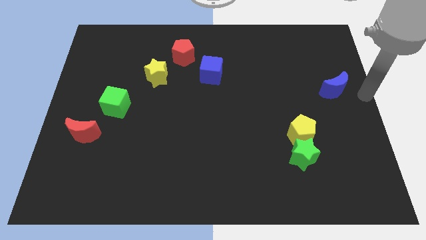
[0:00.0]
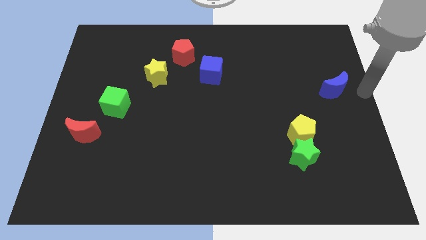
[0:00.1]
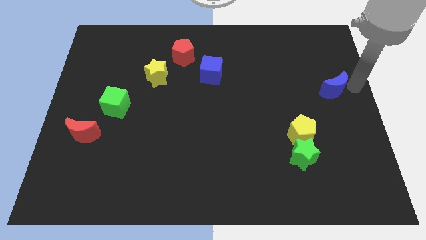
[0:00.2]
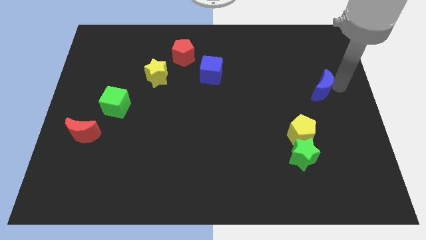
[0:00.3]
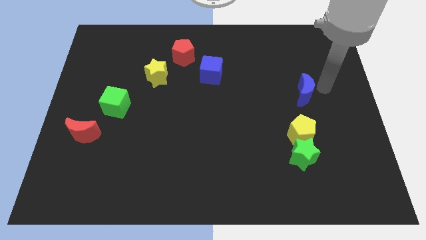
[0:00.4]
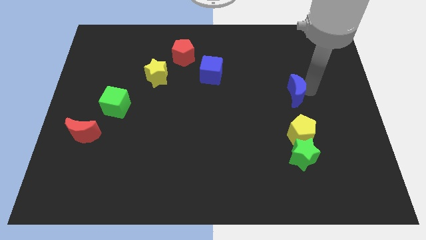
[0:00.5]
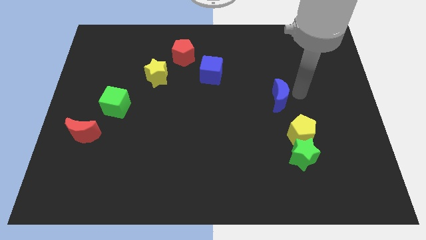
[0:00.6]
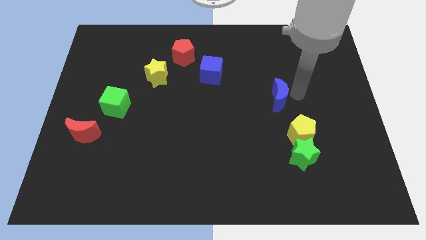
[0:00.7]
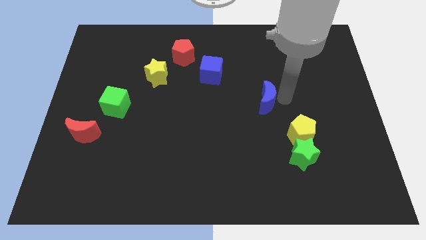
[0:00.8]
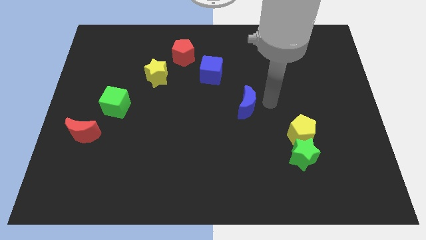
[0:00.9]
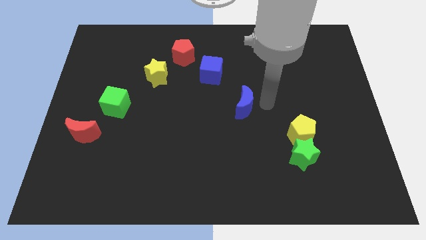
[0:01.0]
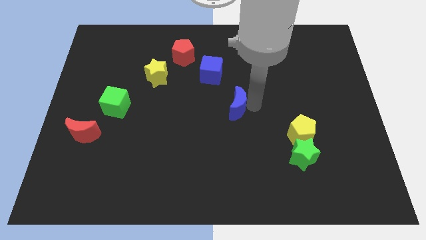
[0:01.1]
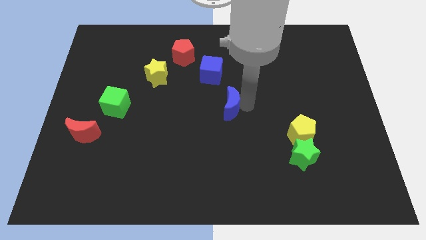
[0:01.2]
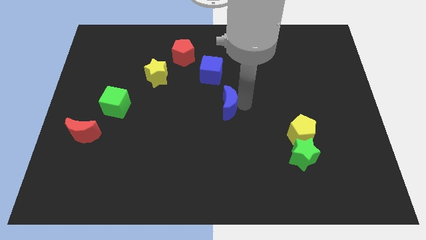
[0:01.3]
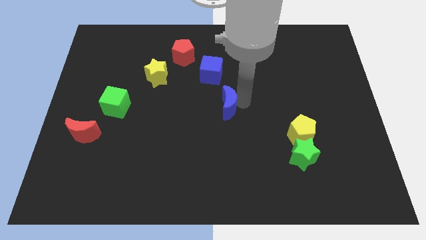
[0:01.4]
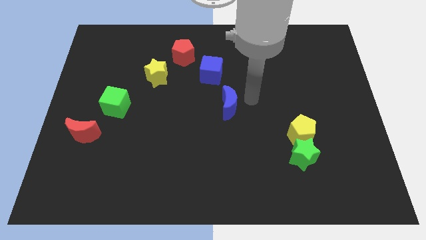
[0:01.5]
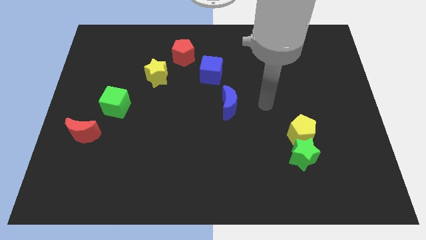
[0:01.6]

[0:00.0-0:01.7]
place the blue moon at the center of the board

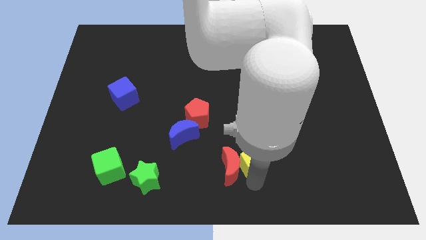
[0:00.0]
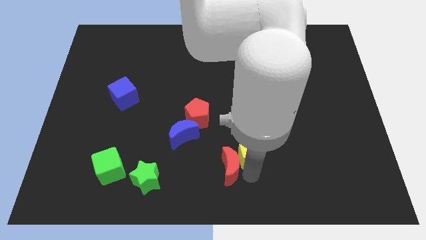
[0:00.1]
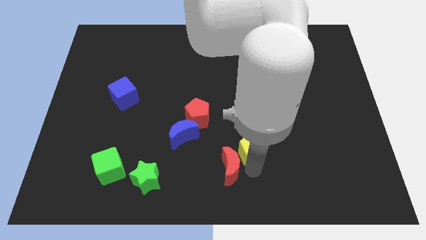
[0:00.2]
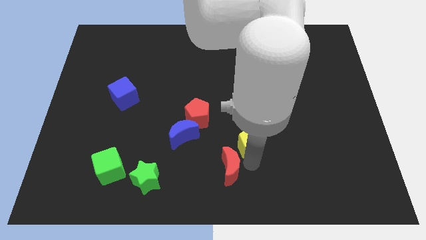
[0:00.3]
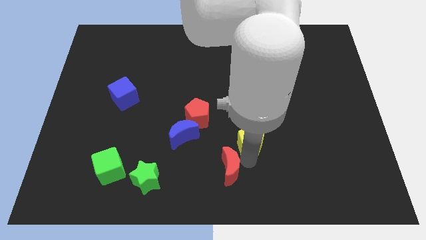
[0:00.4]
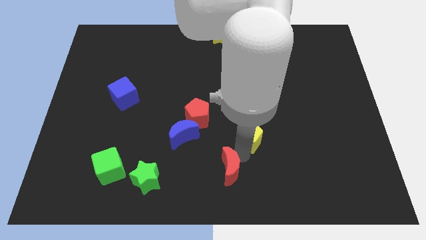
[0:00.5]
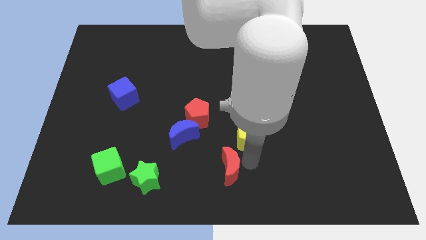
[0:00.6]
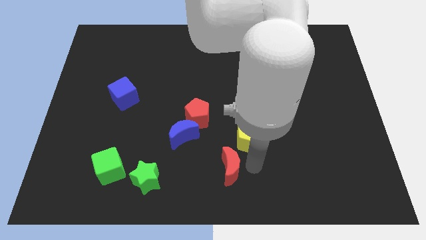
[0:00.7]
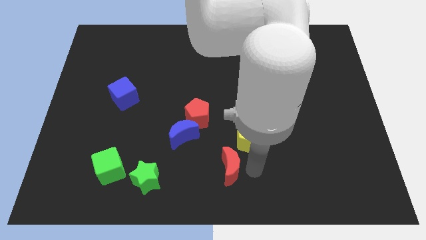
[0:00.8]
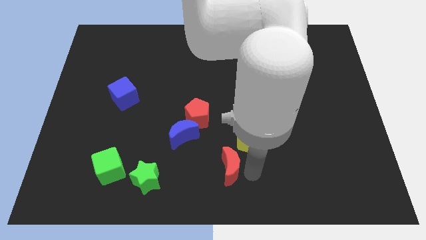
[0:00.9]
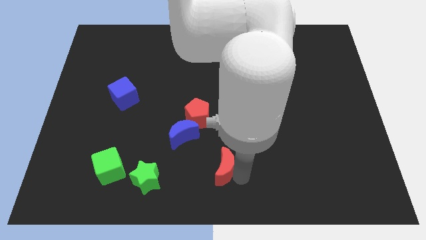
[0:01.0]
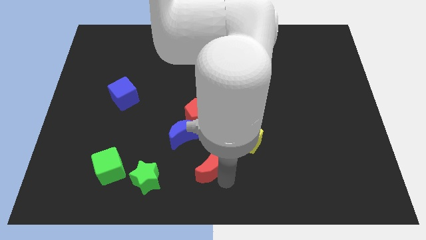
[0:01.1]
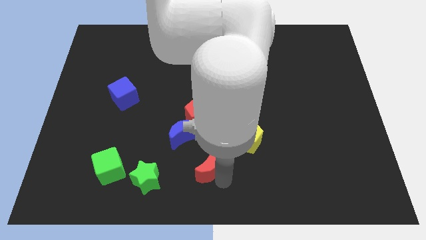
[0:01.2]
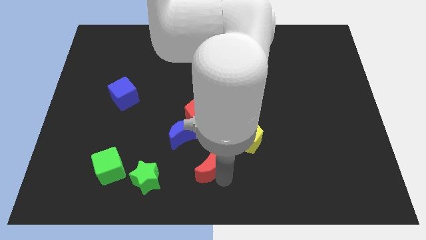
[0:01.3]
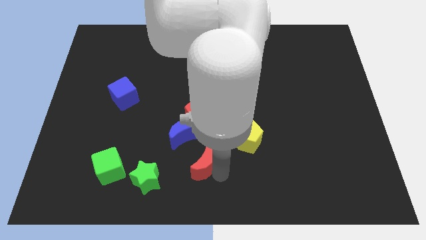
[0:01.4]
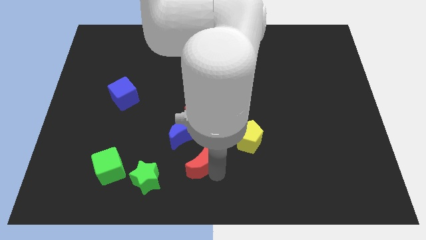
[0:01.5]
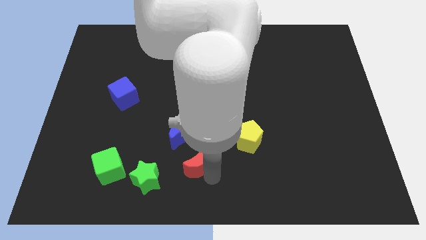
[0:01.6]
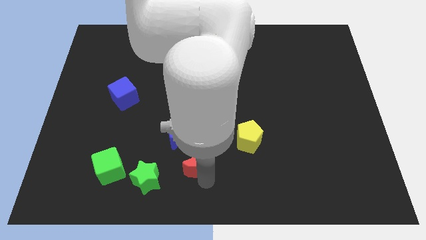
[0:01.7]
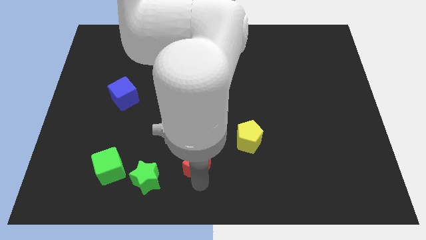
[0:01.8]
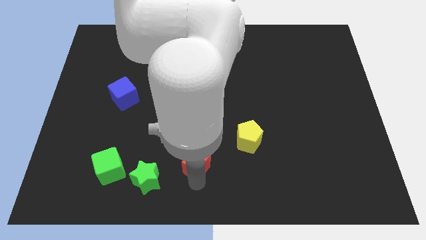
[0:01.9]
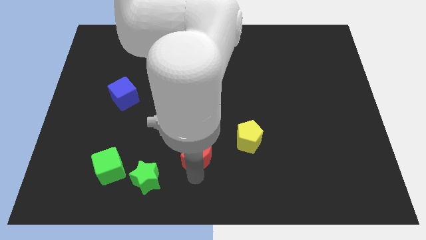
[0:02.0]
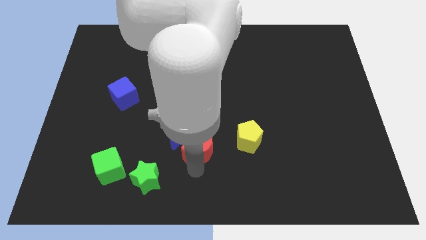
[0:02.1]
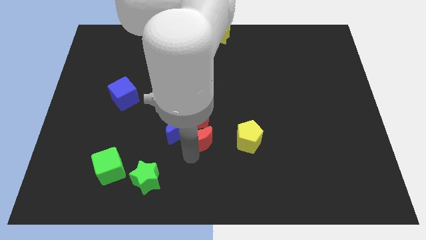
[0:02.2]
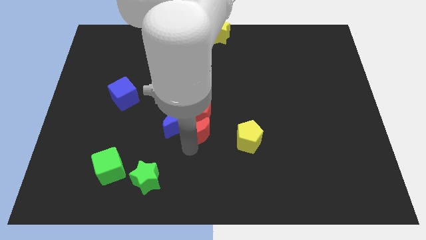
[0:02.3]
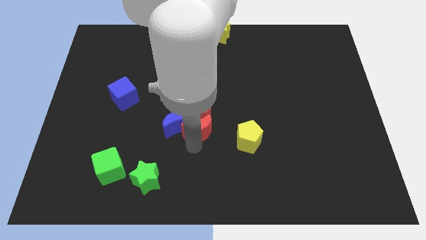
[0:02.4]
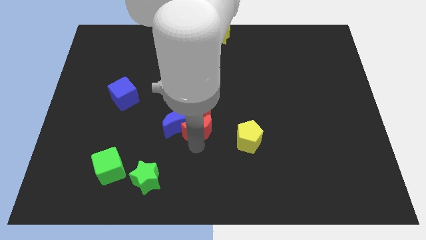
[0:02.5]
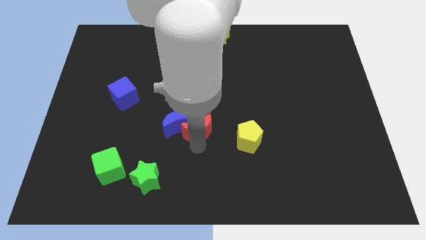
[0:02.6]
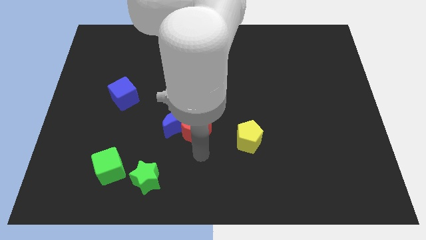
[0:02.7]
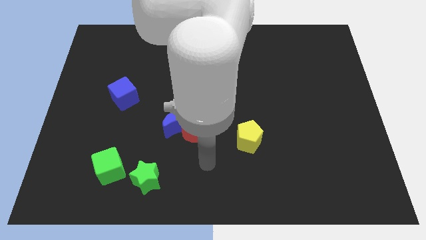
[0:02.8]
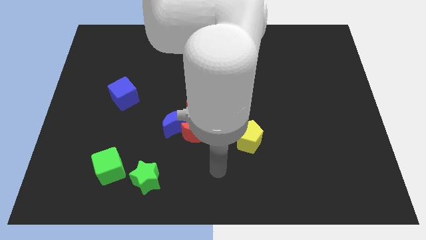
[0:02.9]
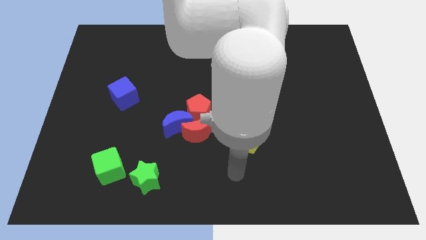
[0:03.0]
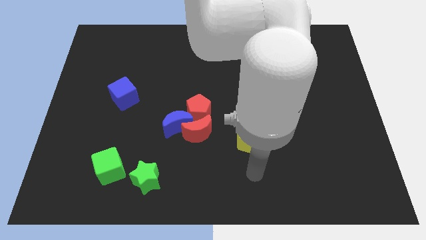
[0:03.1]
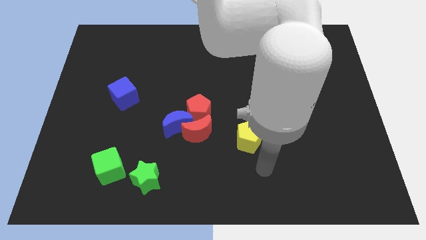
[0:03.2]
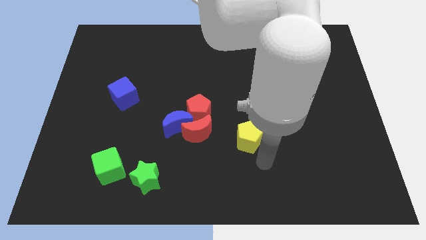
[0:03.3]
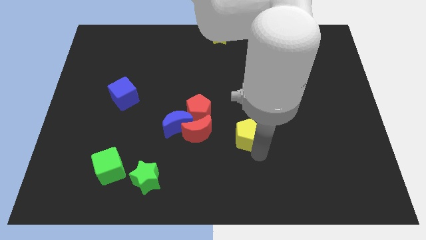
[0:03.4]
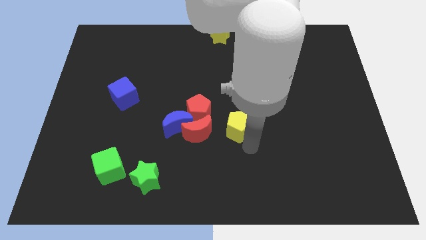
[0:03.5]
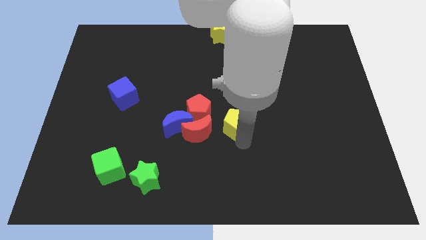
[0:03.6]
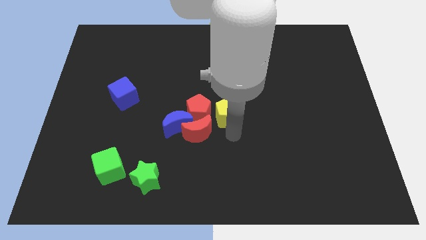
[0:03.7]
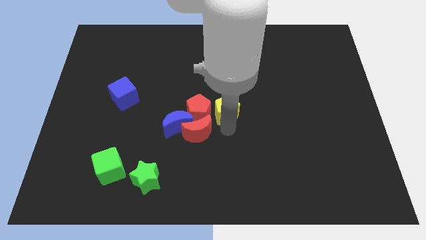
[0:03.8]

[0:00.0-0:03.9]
move red crescent into the blue crescent and red pentagon

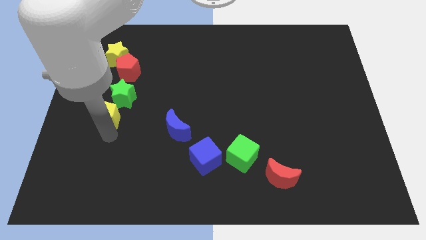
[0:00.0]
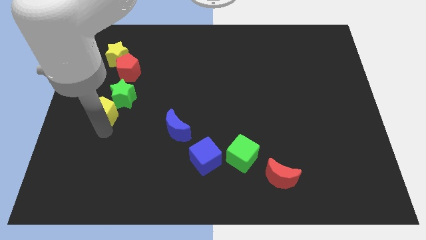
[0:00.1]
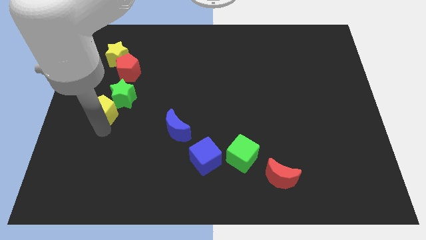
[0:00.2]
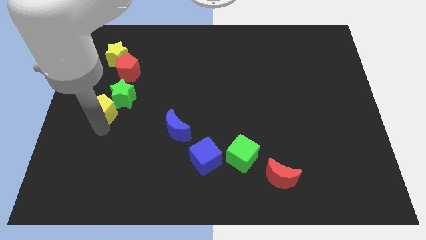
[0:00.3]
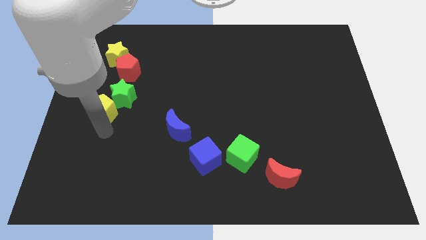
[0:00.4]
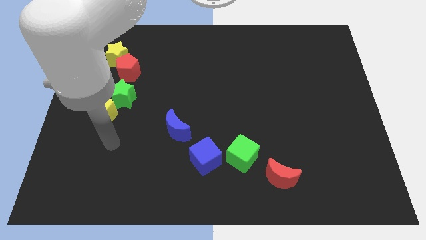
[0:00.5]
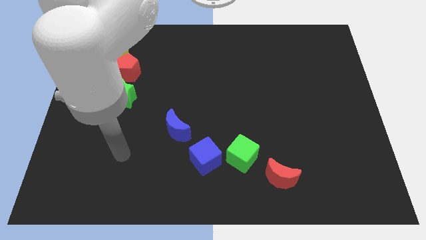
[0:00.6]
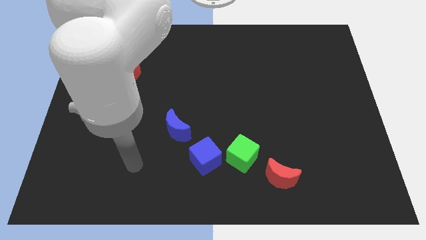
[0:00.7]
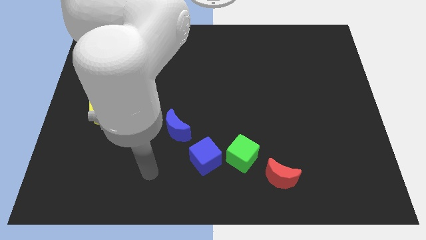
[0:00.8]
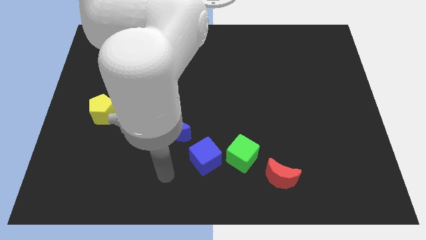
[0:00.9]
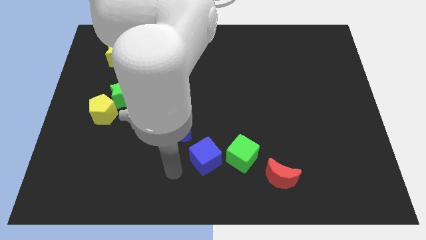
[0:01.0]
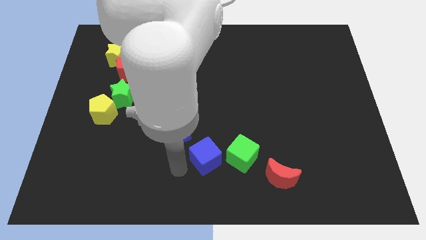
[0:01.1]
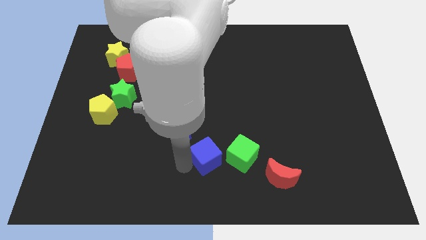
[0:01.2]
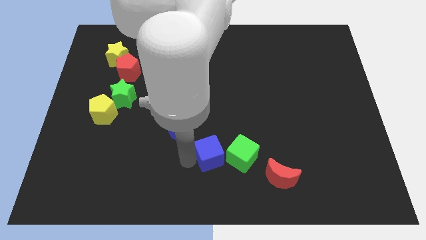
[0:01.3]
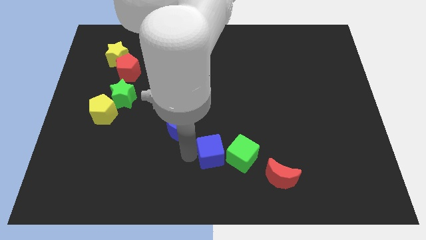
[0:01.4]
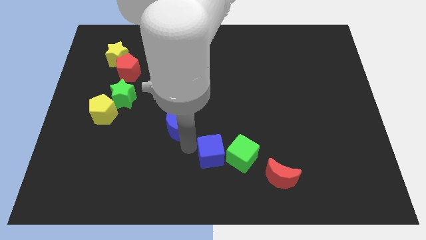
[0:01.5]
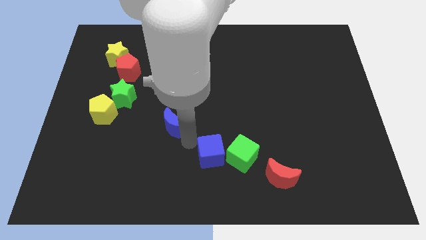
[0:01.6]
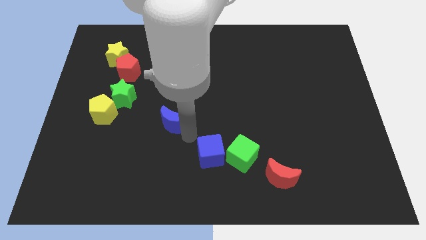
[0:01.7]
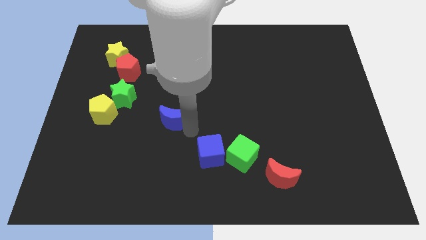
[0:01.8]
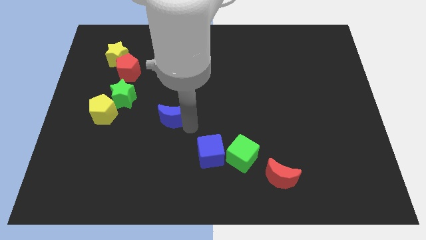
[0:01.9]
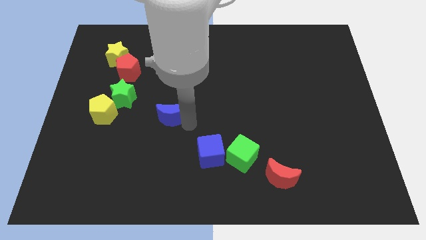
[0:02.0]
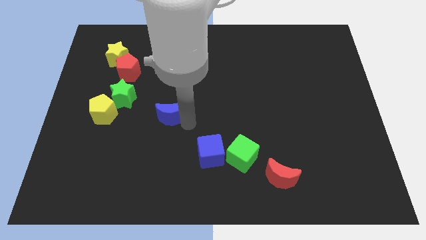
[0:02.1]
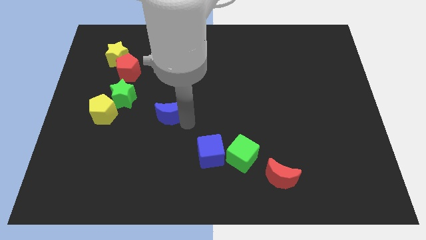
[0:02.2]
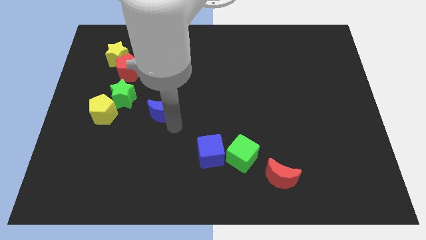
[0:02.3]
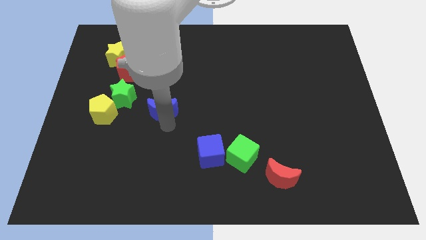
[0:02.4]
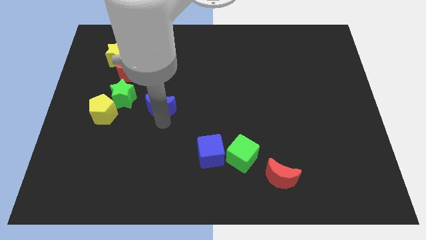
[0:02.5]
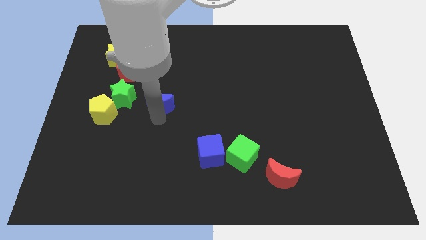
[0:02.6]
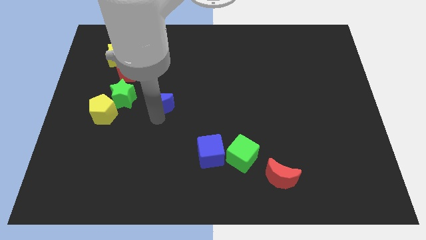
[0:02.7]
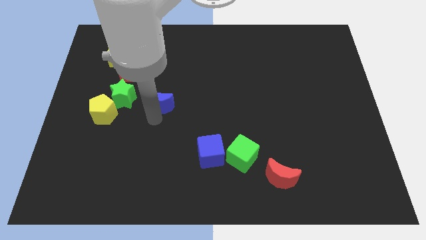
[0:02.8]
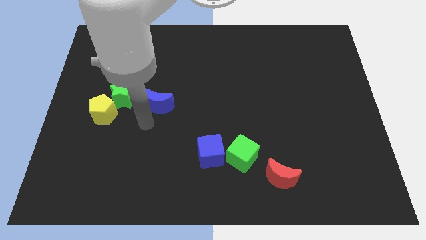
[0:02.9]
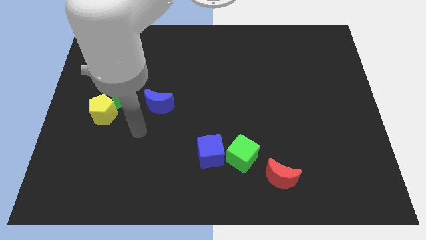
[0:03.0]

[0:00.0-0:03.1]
move the blue moon to the right of the green star

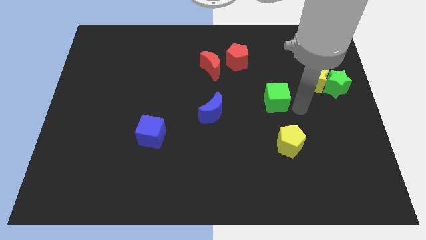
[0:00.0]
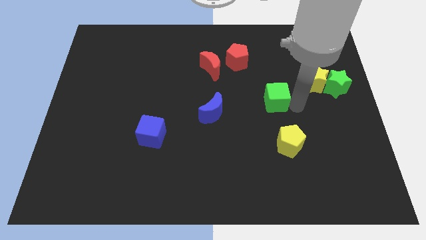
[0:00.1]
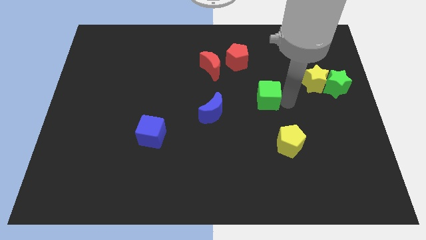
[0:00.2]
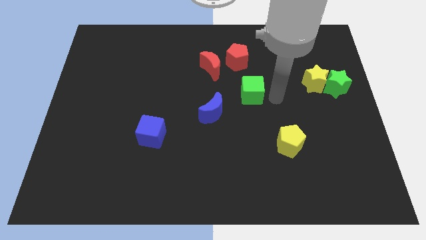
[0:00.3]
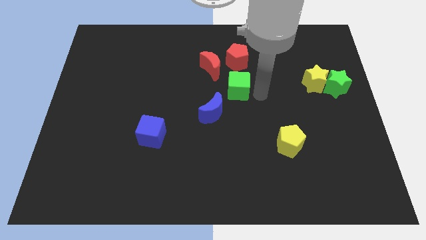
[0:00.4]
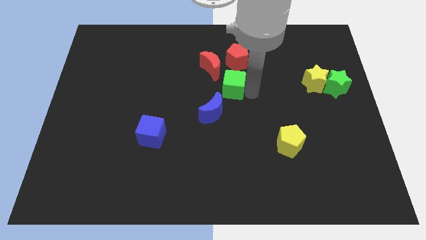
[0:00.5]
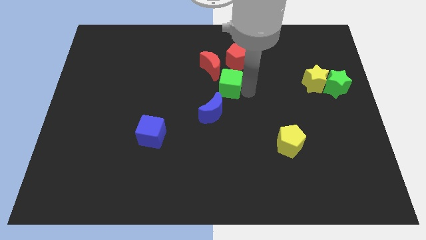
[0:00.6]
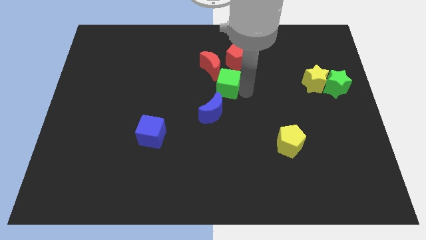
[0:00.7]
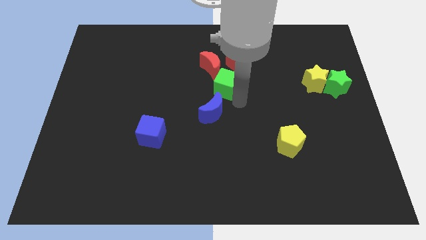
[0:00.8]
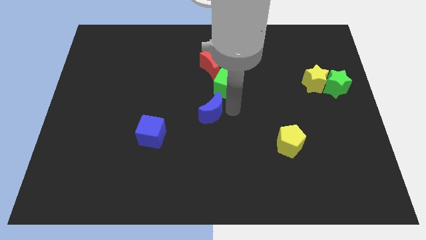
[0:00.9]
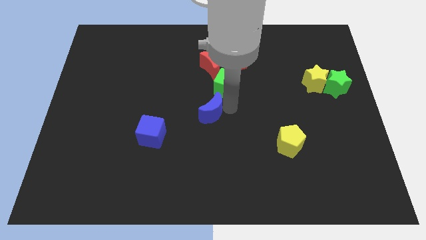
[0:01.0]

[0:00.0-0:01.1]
push green cube below the red crescent
